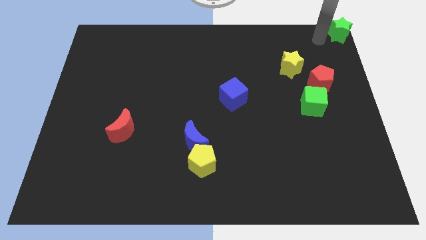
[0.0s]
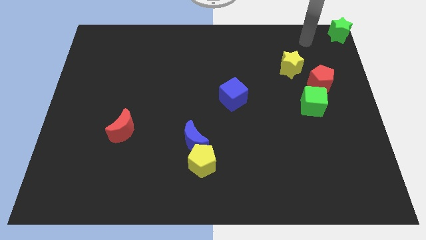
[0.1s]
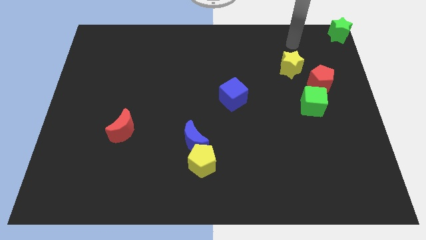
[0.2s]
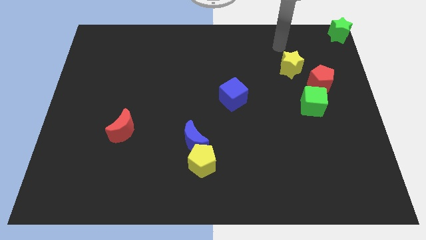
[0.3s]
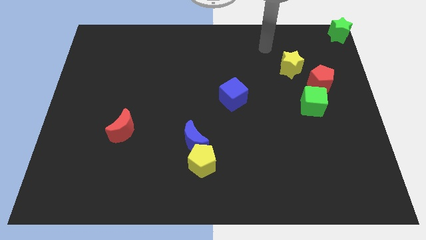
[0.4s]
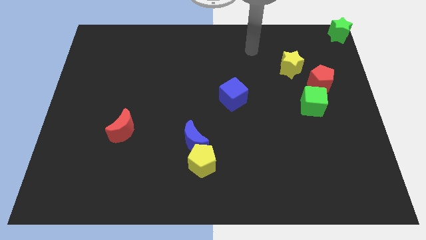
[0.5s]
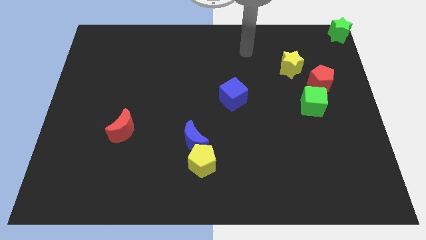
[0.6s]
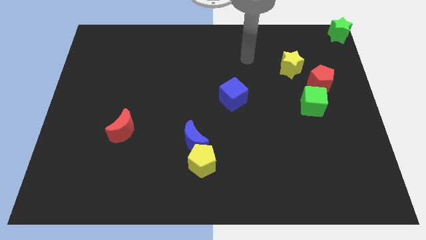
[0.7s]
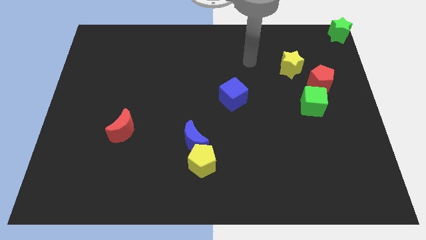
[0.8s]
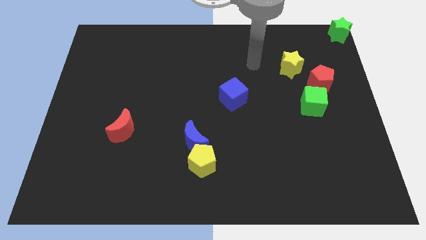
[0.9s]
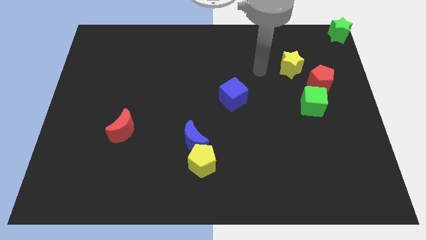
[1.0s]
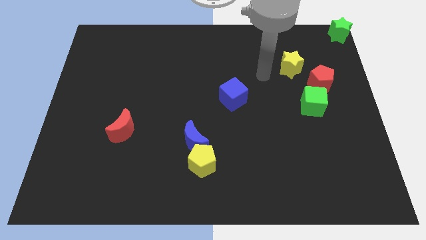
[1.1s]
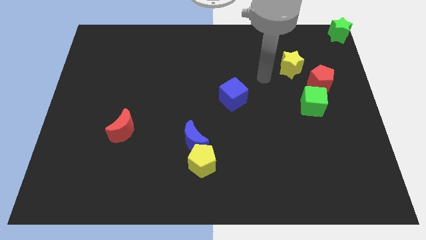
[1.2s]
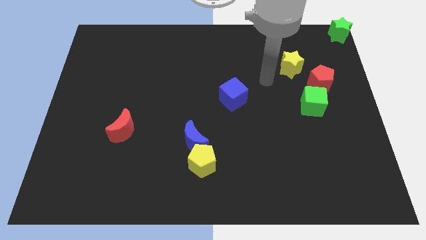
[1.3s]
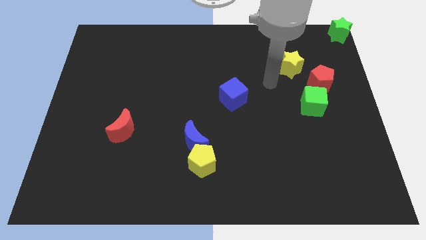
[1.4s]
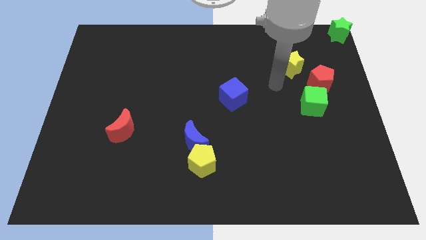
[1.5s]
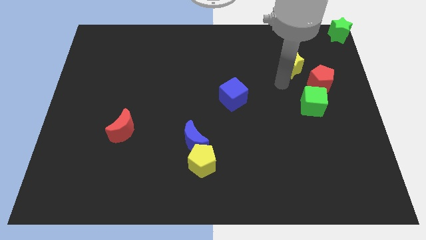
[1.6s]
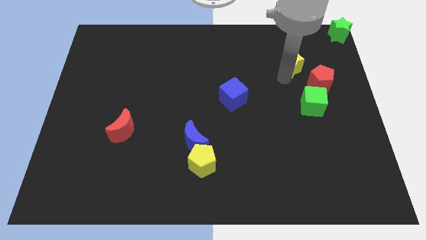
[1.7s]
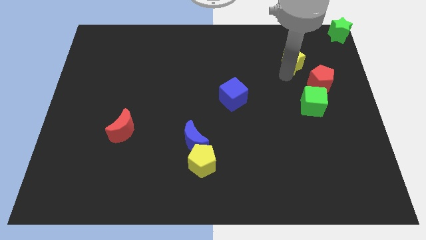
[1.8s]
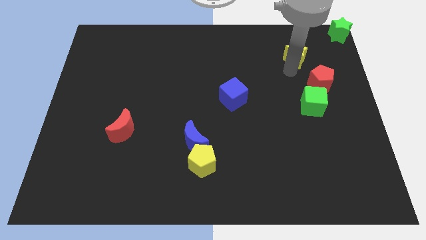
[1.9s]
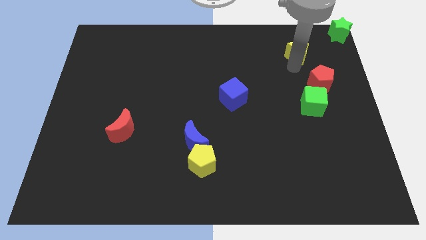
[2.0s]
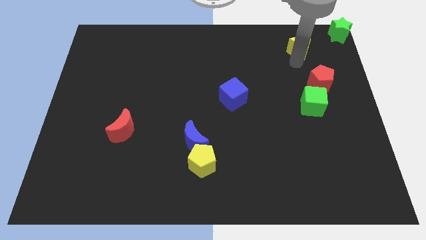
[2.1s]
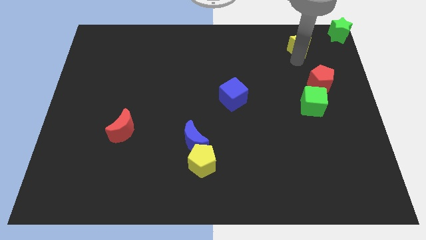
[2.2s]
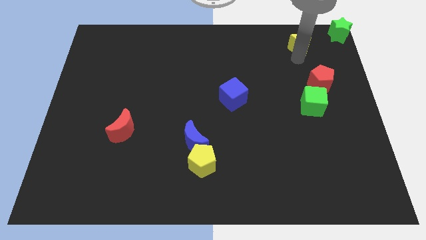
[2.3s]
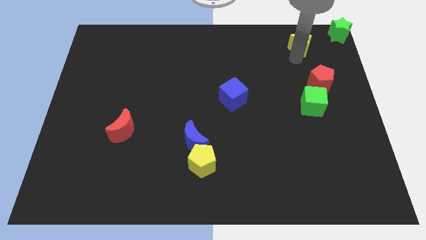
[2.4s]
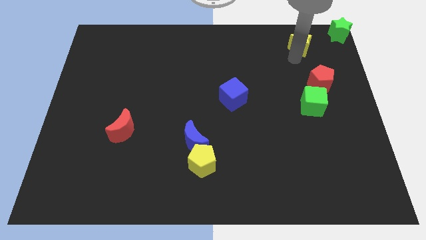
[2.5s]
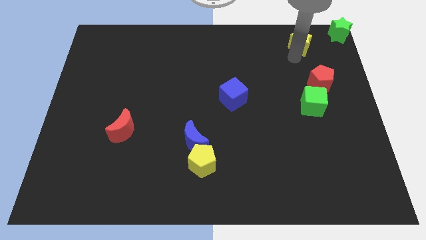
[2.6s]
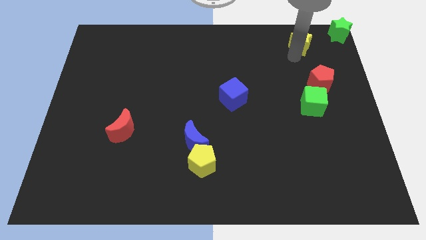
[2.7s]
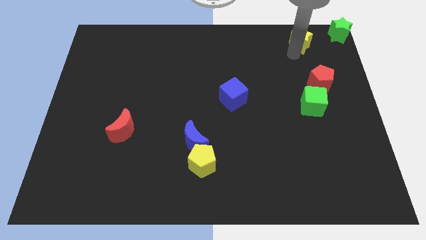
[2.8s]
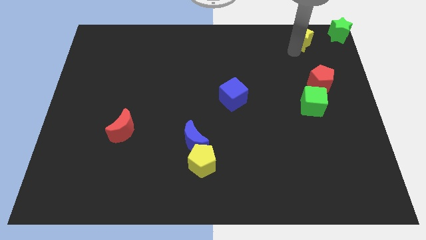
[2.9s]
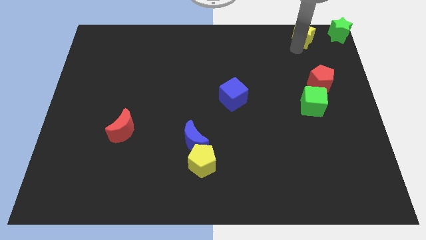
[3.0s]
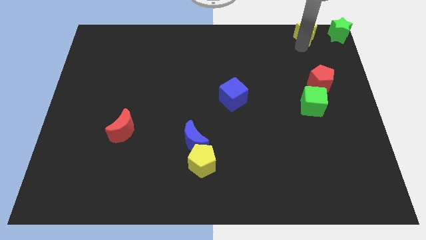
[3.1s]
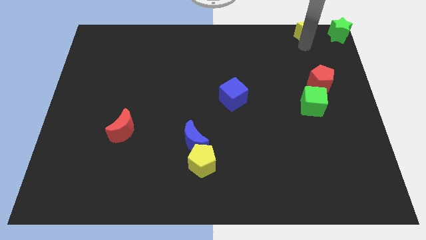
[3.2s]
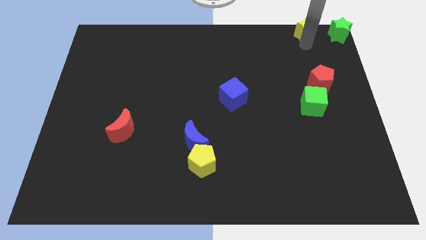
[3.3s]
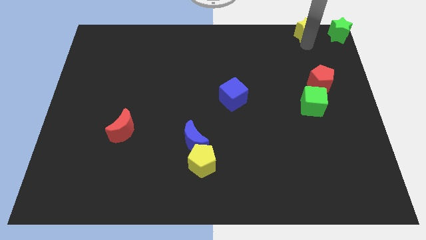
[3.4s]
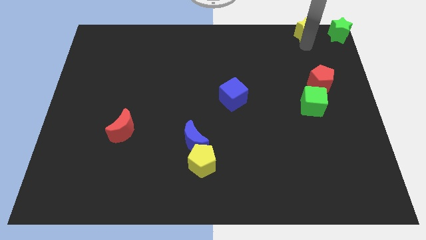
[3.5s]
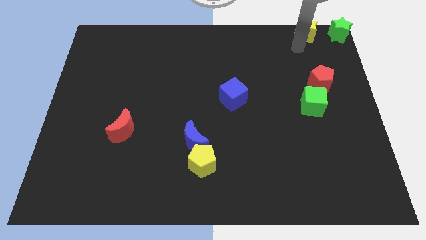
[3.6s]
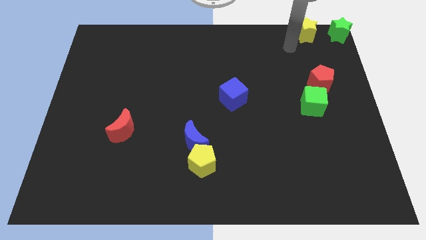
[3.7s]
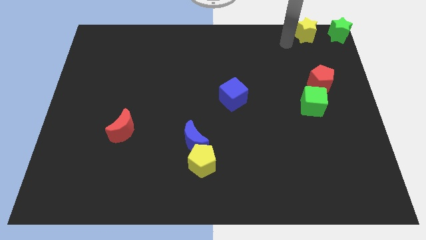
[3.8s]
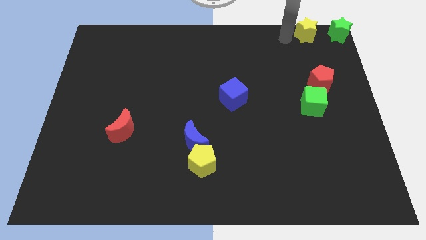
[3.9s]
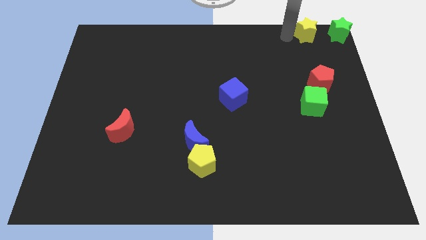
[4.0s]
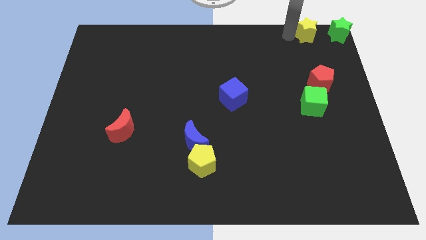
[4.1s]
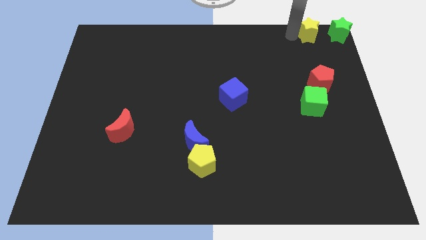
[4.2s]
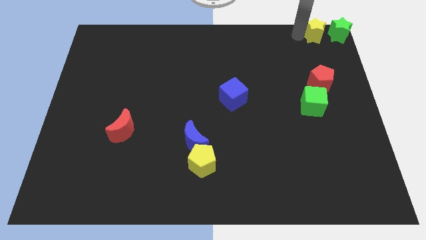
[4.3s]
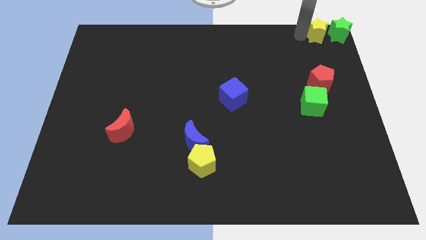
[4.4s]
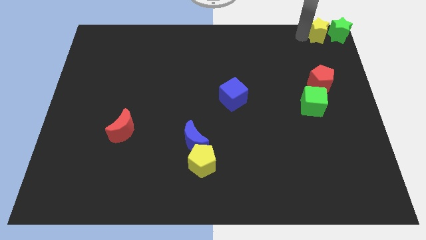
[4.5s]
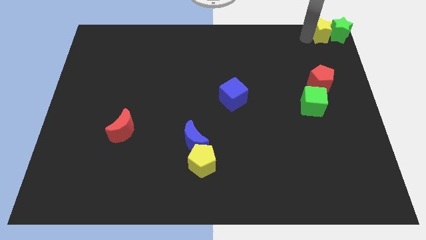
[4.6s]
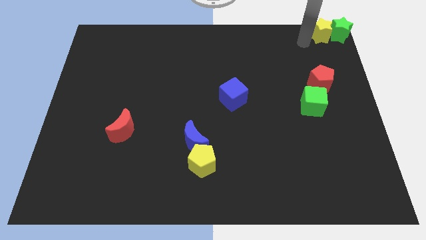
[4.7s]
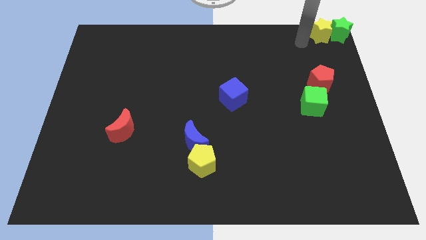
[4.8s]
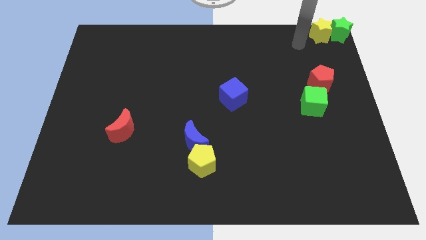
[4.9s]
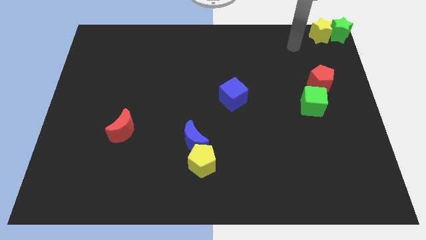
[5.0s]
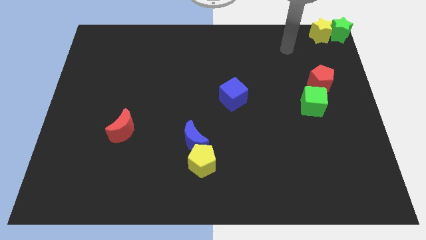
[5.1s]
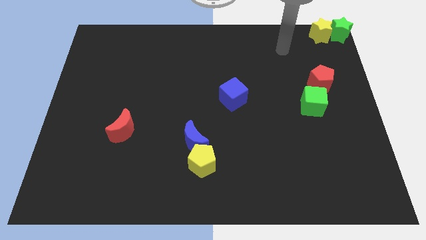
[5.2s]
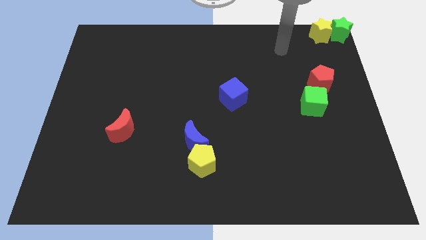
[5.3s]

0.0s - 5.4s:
push the yellow star into the green star

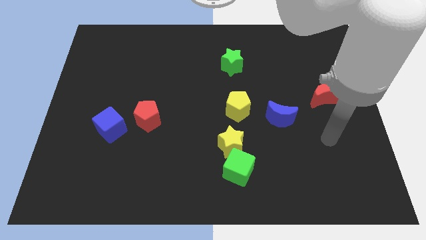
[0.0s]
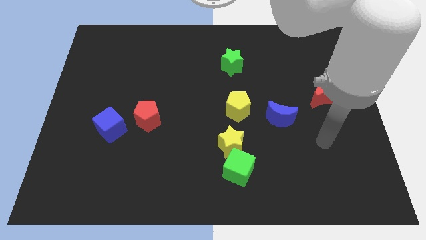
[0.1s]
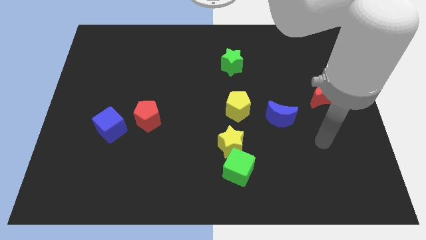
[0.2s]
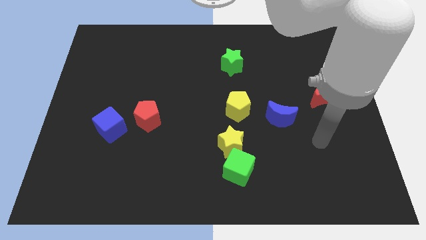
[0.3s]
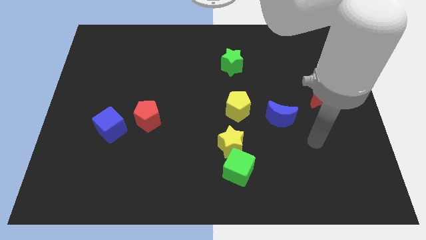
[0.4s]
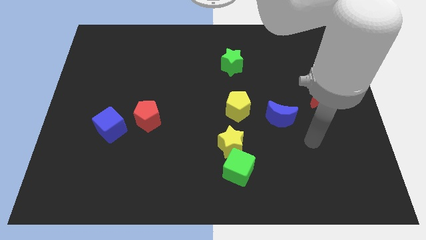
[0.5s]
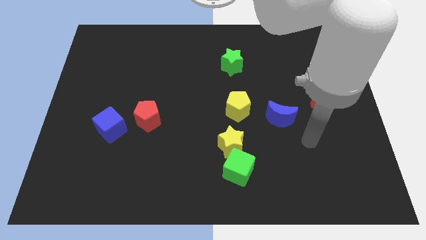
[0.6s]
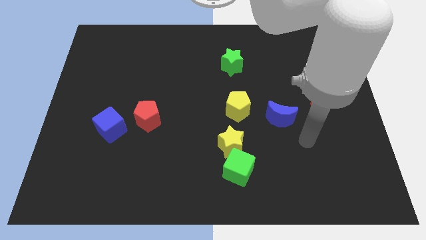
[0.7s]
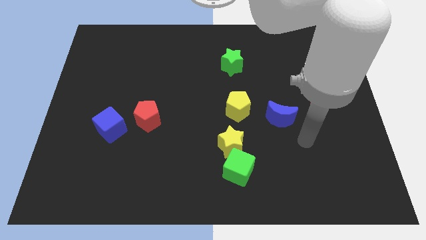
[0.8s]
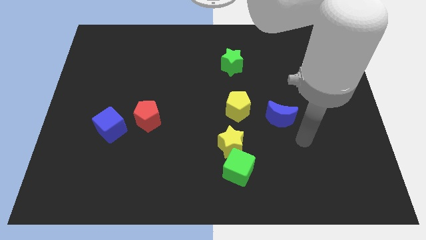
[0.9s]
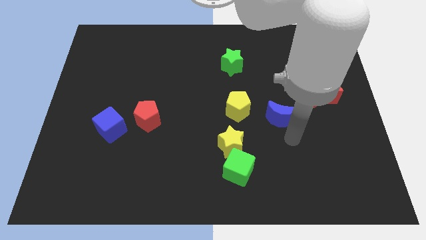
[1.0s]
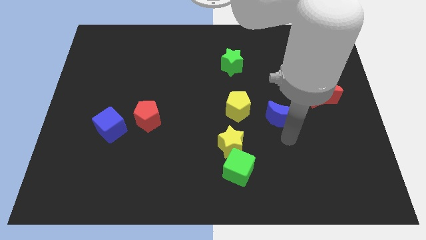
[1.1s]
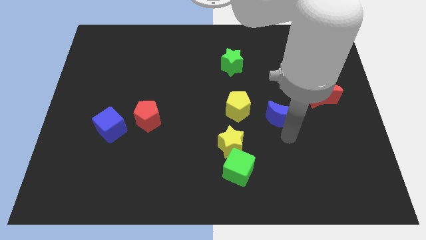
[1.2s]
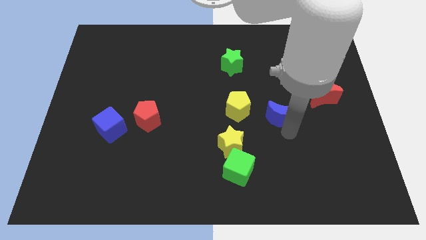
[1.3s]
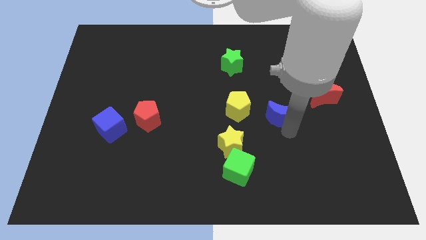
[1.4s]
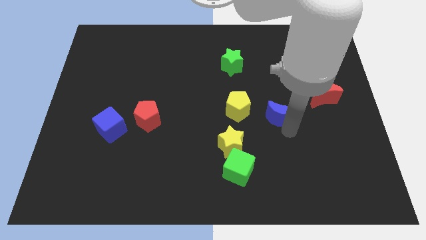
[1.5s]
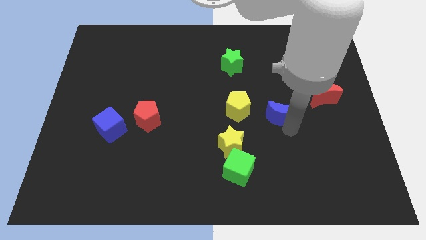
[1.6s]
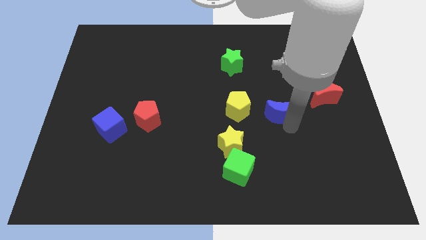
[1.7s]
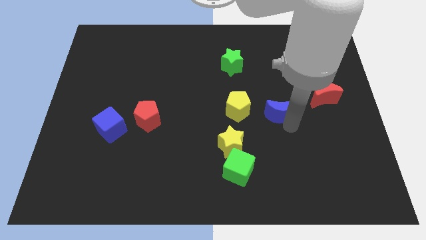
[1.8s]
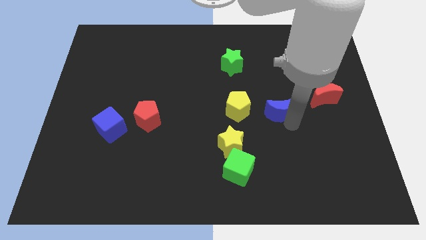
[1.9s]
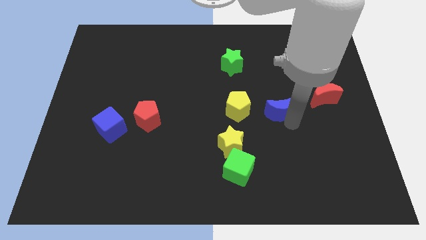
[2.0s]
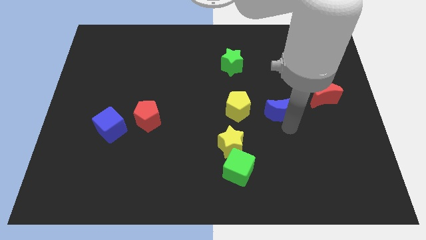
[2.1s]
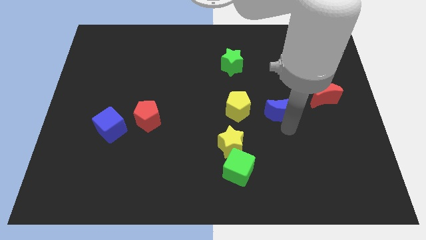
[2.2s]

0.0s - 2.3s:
move the blue moon slightly up

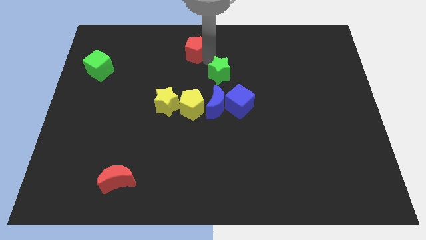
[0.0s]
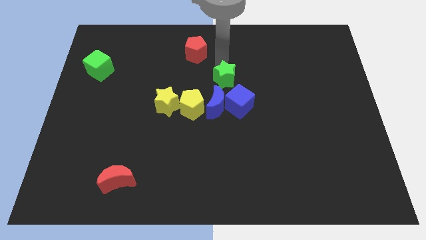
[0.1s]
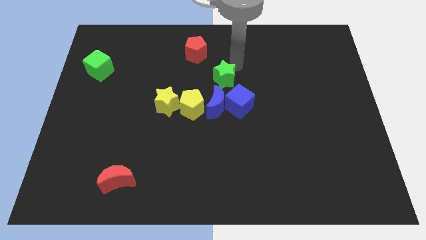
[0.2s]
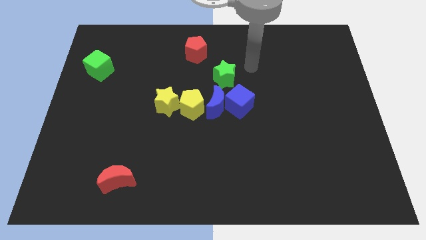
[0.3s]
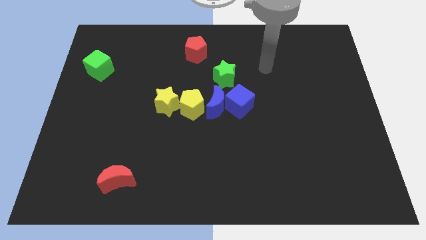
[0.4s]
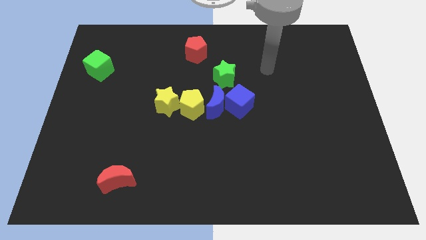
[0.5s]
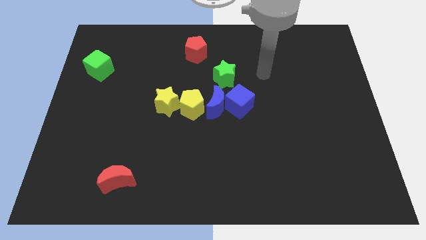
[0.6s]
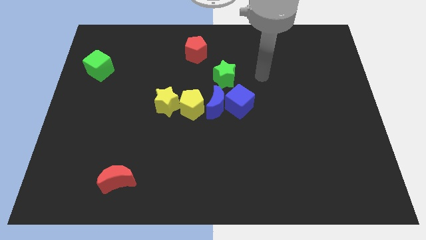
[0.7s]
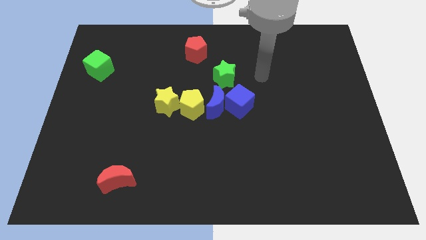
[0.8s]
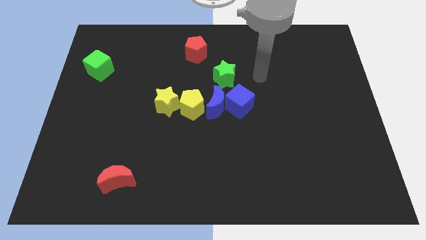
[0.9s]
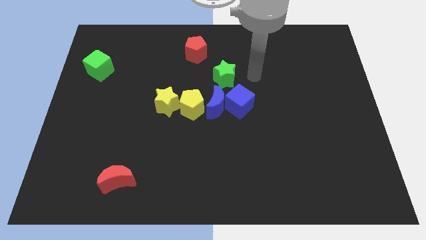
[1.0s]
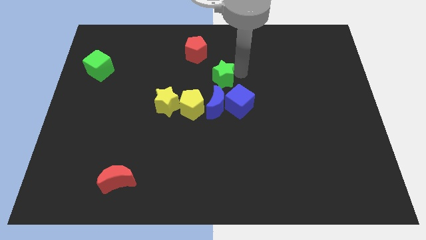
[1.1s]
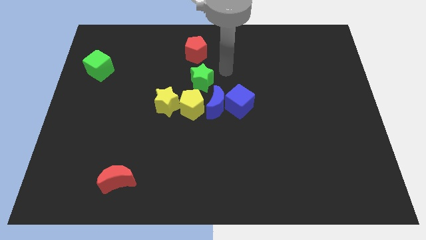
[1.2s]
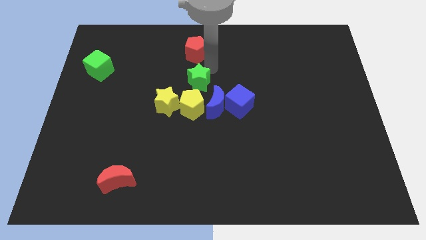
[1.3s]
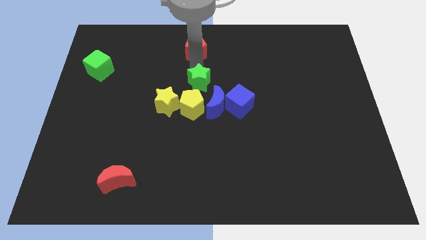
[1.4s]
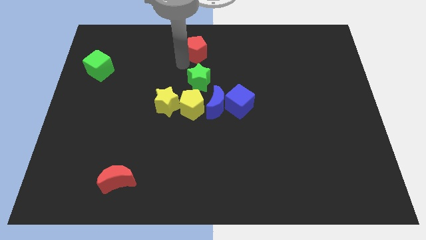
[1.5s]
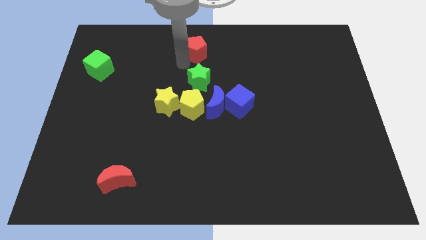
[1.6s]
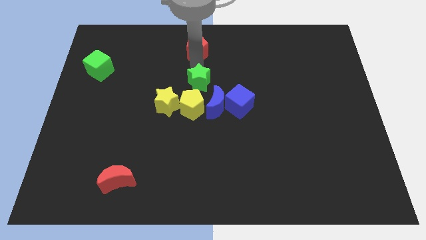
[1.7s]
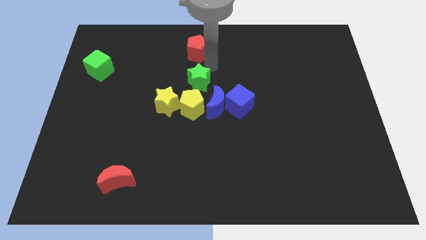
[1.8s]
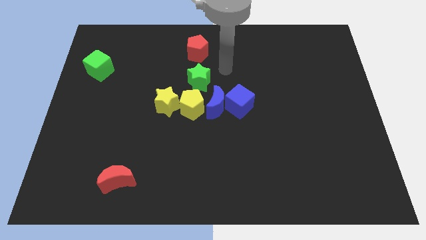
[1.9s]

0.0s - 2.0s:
push the green star on to the top of the yellow pentagon
